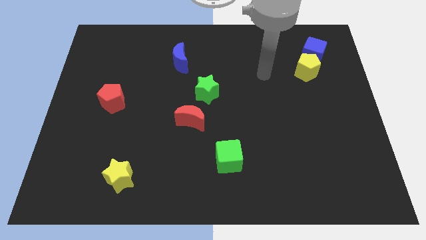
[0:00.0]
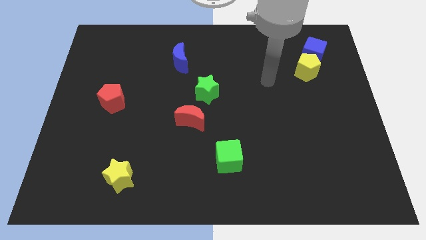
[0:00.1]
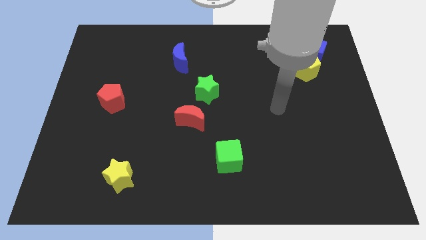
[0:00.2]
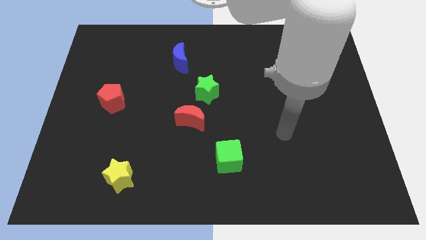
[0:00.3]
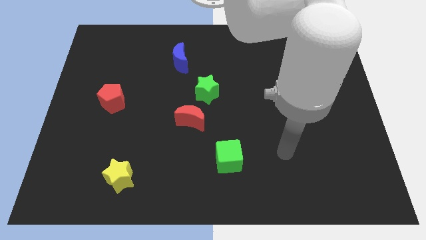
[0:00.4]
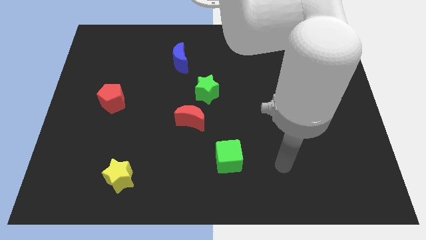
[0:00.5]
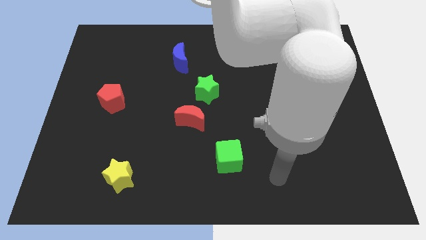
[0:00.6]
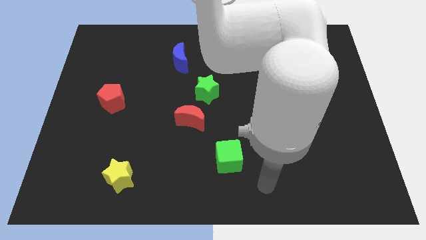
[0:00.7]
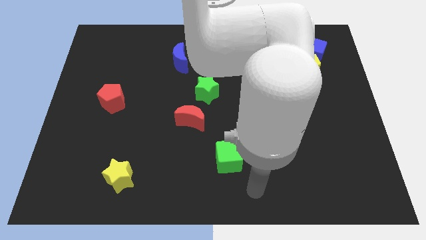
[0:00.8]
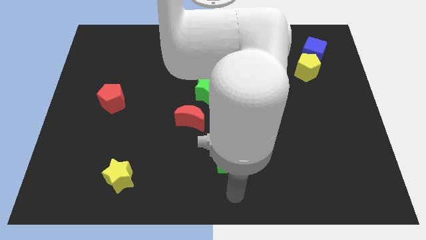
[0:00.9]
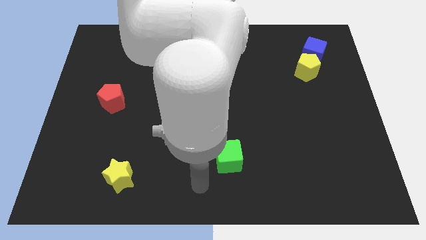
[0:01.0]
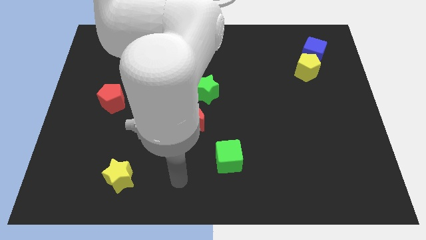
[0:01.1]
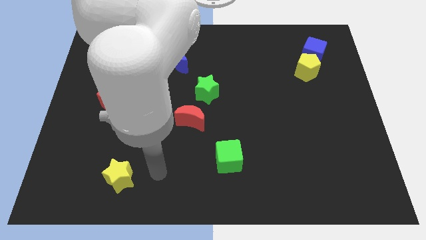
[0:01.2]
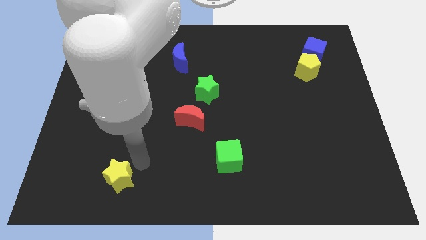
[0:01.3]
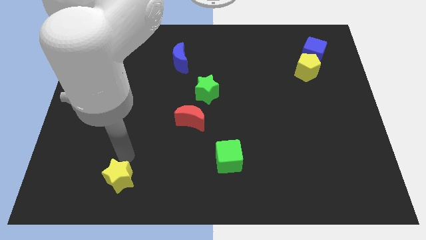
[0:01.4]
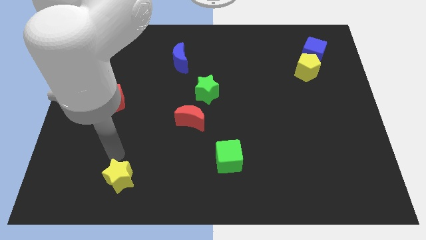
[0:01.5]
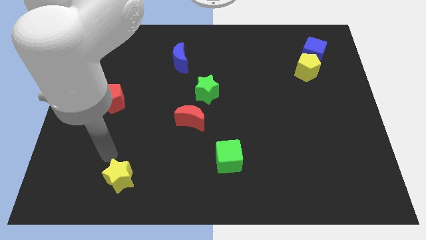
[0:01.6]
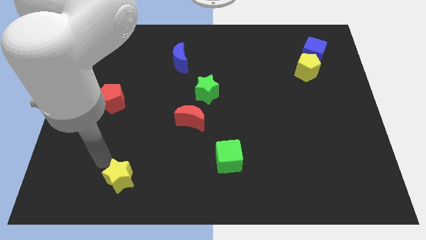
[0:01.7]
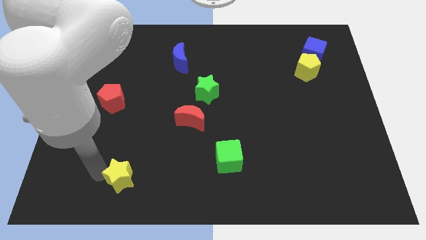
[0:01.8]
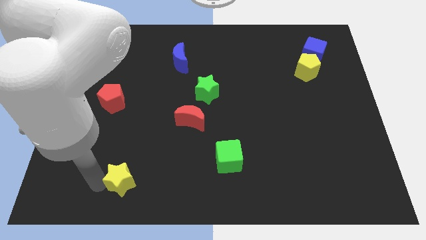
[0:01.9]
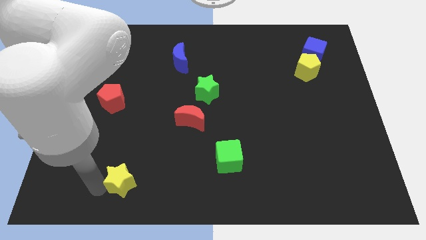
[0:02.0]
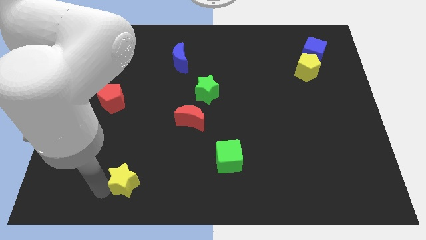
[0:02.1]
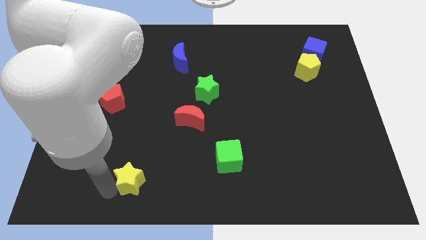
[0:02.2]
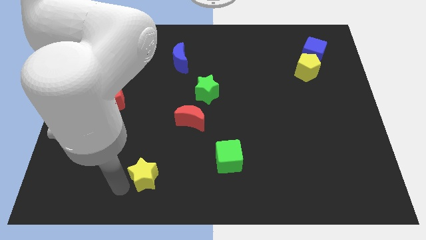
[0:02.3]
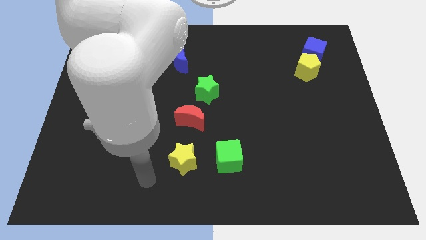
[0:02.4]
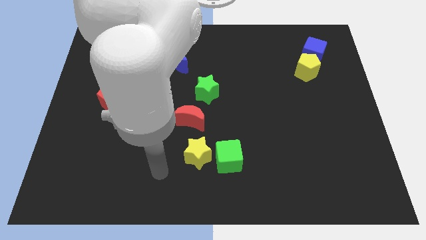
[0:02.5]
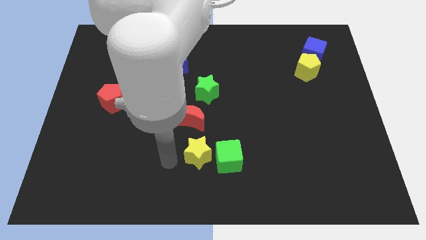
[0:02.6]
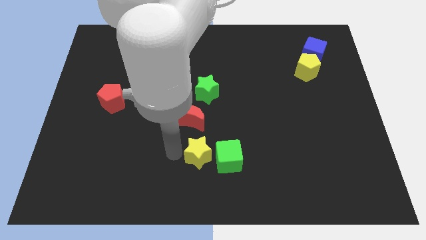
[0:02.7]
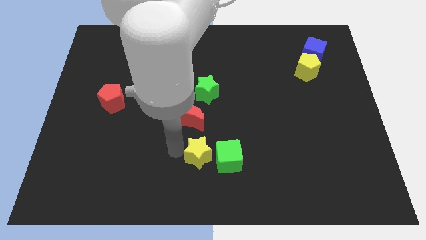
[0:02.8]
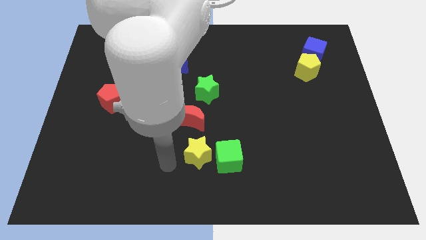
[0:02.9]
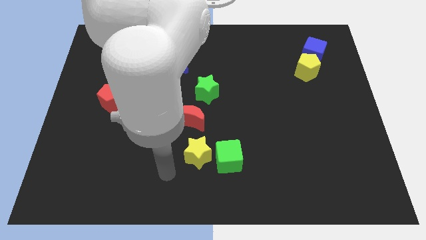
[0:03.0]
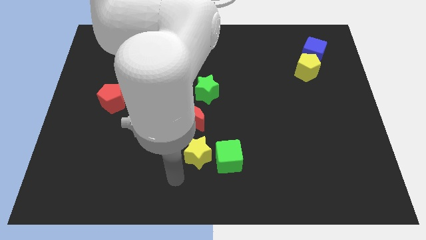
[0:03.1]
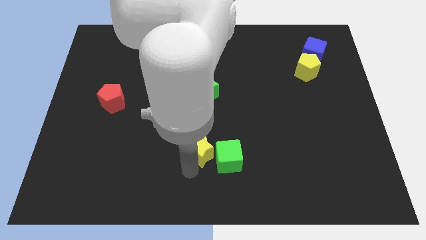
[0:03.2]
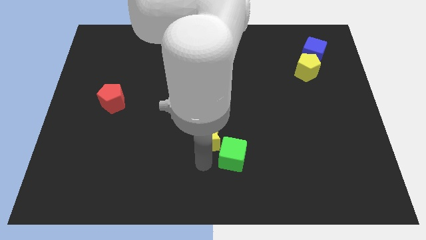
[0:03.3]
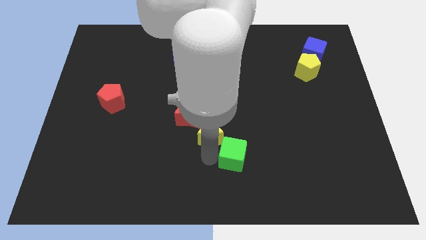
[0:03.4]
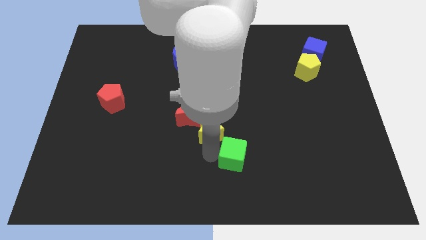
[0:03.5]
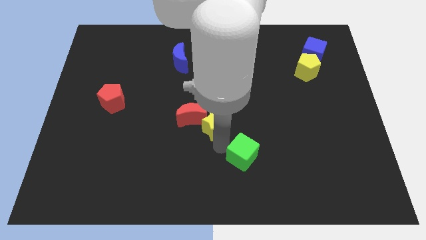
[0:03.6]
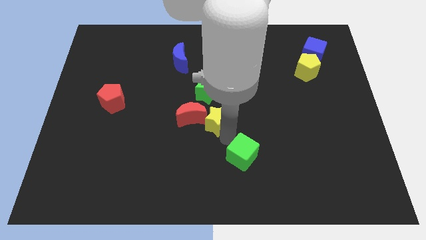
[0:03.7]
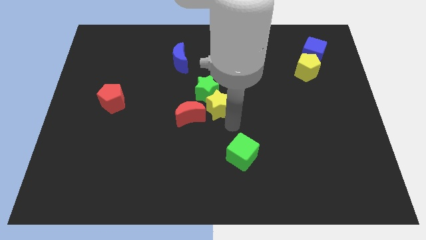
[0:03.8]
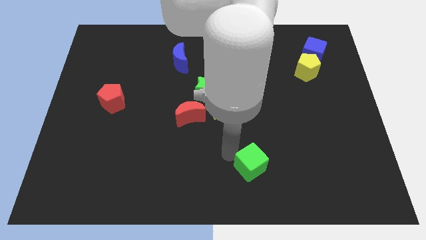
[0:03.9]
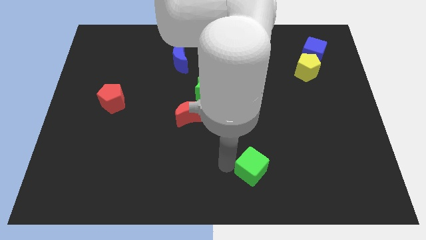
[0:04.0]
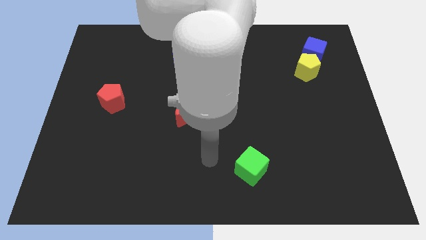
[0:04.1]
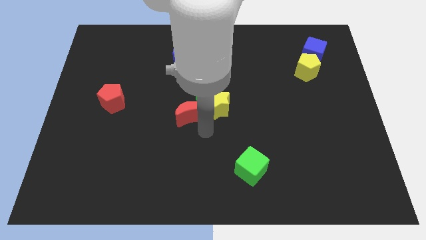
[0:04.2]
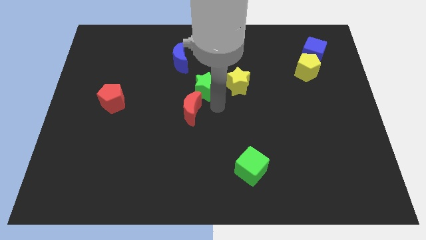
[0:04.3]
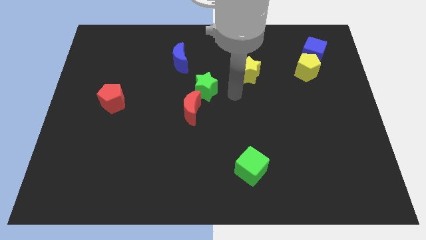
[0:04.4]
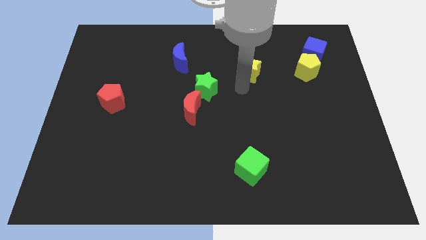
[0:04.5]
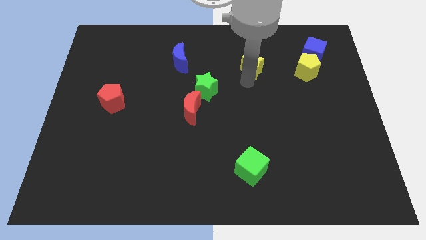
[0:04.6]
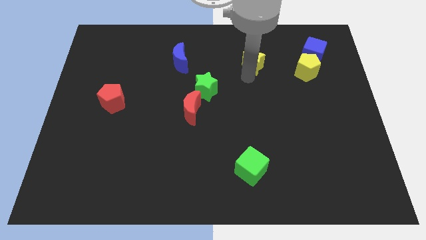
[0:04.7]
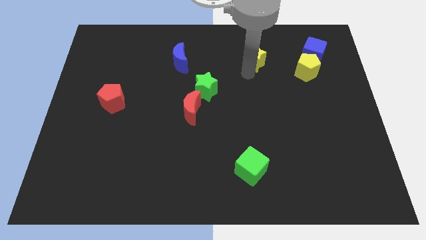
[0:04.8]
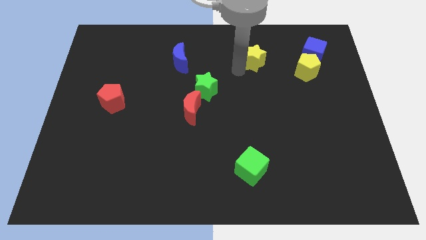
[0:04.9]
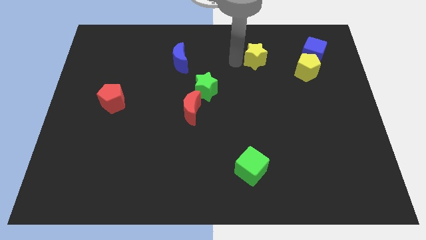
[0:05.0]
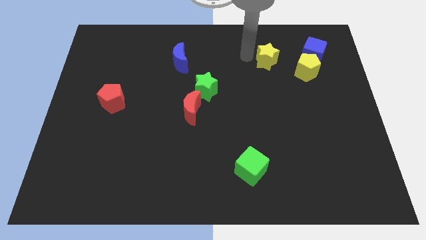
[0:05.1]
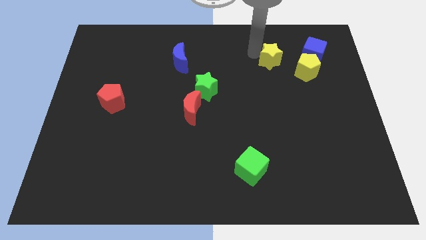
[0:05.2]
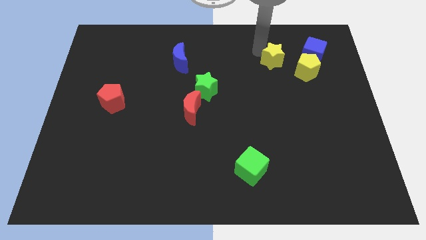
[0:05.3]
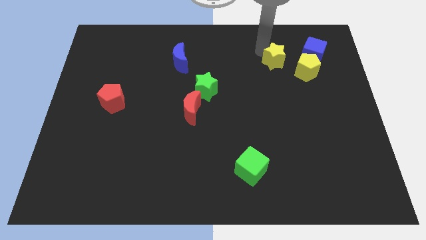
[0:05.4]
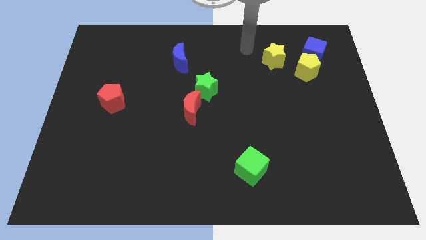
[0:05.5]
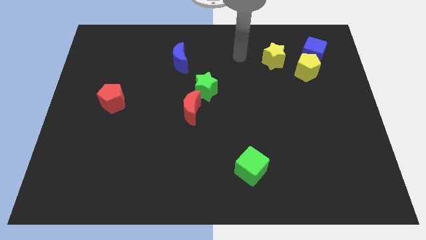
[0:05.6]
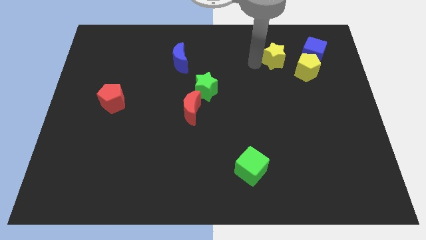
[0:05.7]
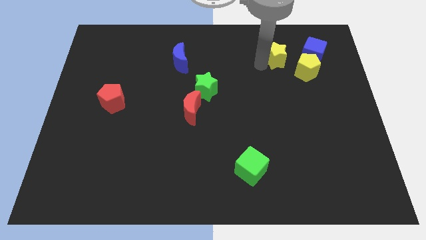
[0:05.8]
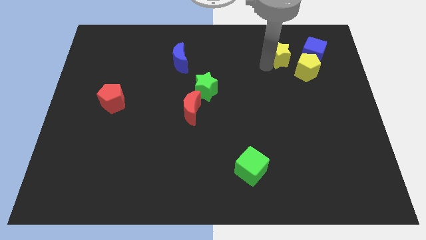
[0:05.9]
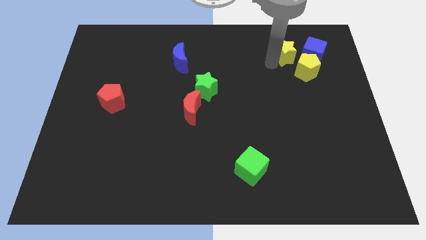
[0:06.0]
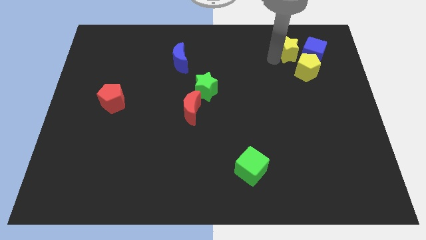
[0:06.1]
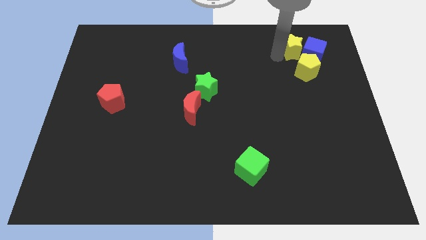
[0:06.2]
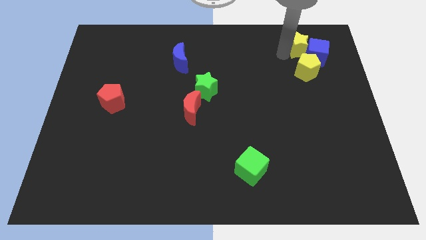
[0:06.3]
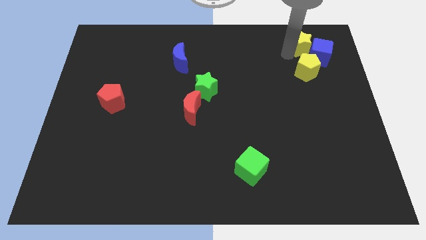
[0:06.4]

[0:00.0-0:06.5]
move the yellow star next to the blue cube

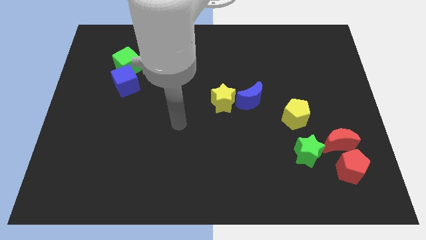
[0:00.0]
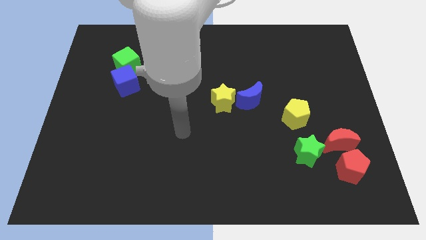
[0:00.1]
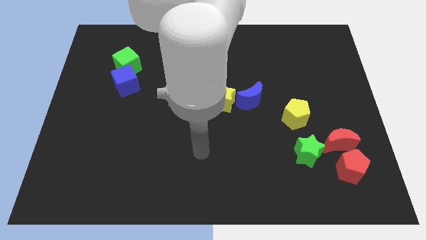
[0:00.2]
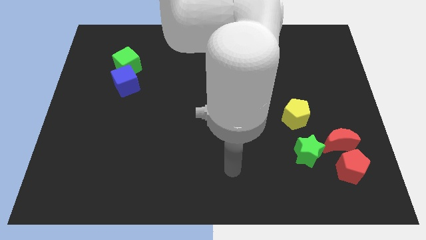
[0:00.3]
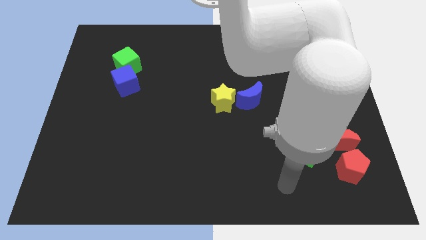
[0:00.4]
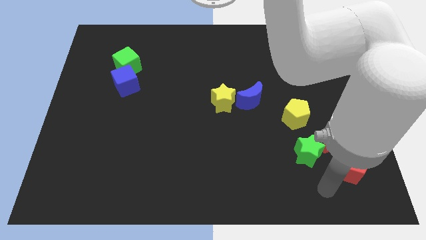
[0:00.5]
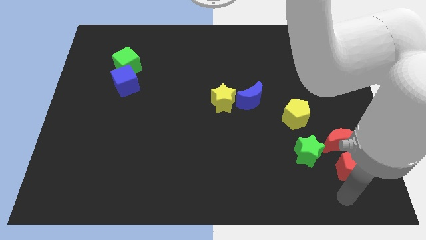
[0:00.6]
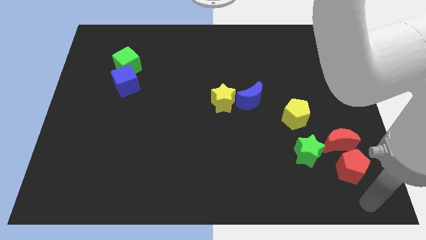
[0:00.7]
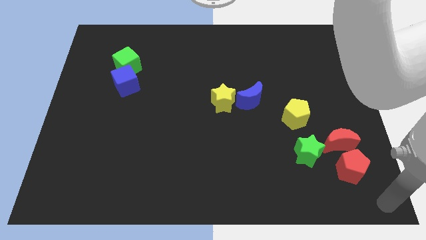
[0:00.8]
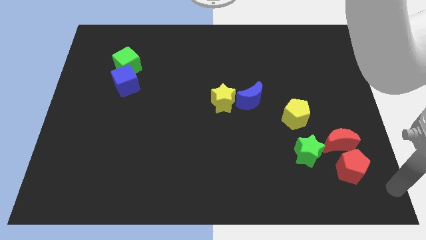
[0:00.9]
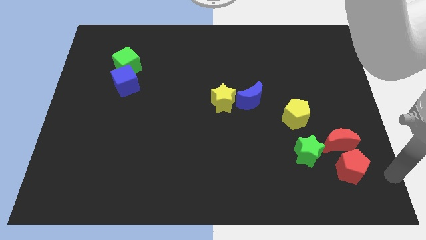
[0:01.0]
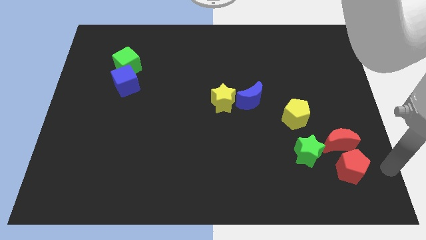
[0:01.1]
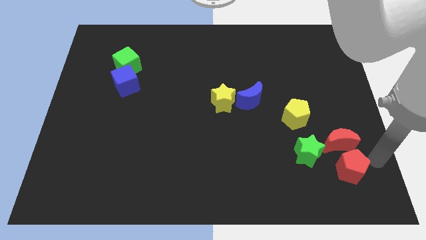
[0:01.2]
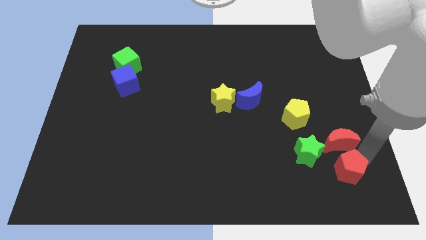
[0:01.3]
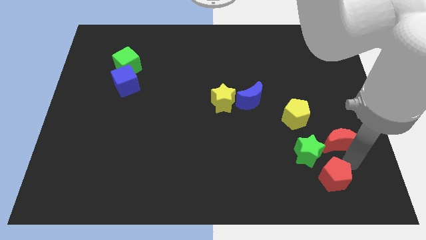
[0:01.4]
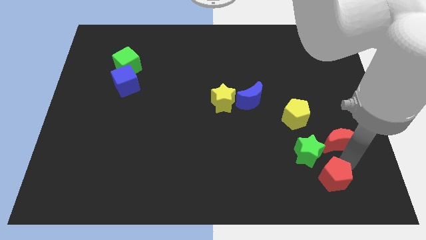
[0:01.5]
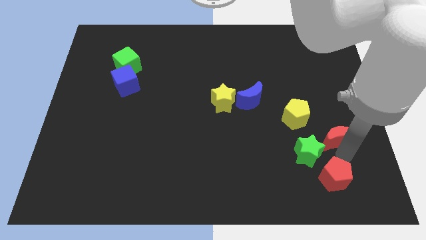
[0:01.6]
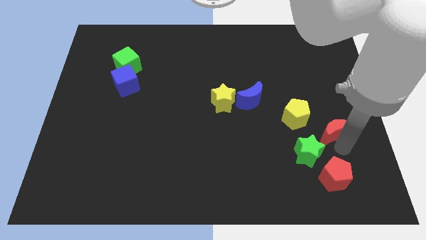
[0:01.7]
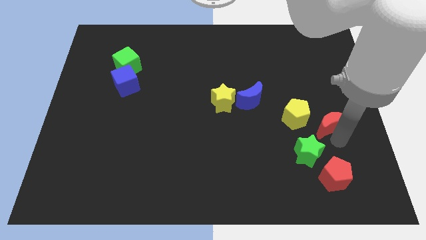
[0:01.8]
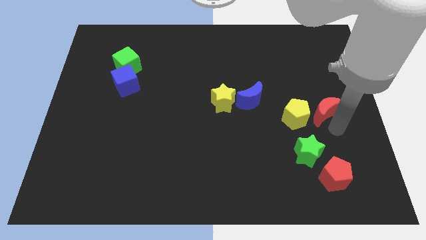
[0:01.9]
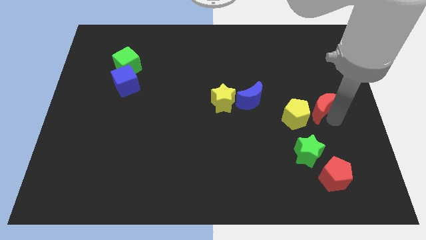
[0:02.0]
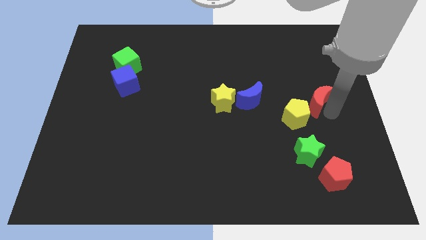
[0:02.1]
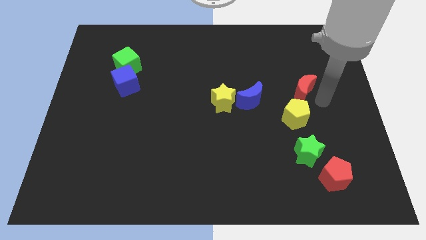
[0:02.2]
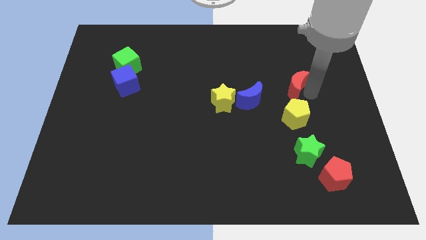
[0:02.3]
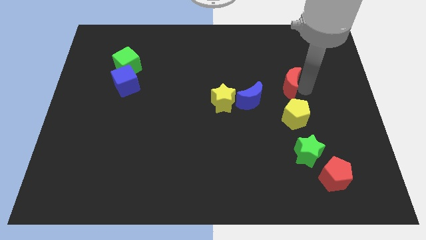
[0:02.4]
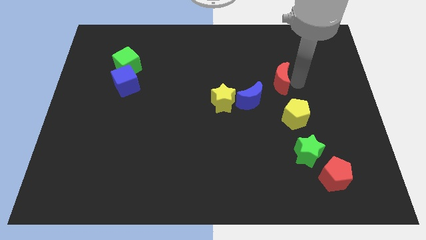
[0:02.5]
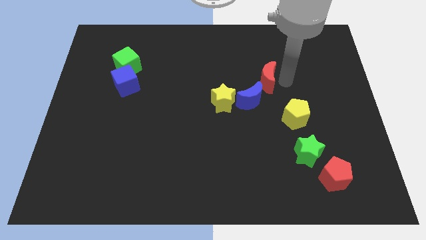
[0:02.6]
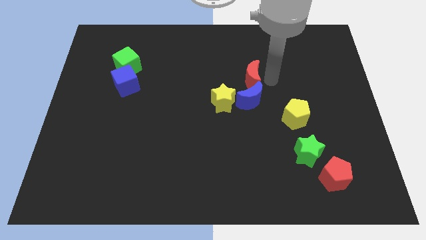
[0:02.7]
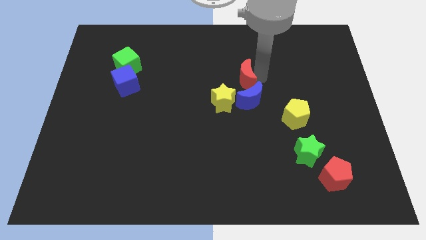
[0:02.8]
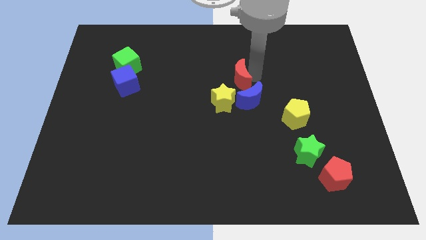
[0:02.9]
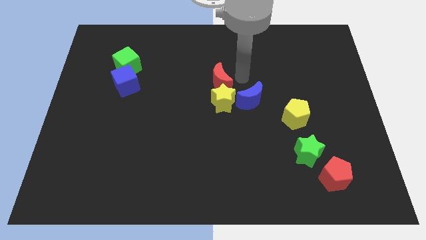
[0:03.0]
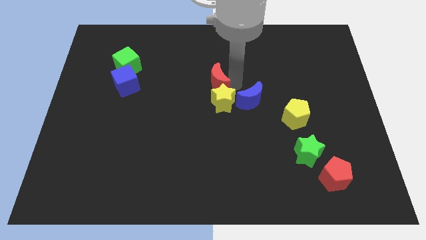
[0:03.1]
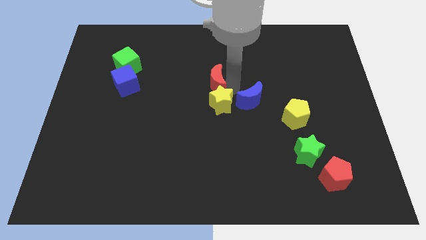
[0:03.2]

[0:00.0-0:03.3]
slide the red moon close to the yellow star
